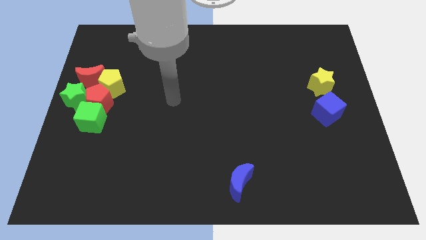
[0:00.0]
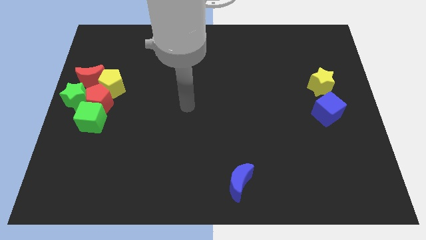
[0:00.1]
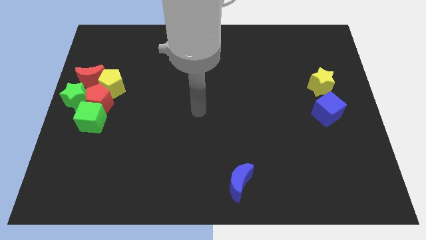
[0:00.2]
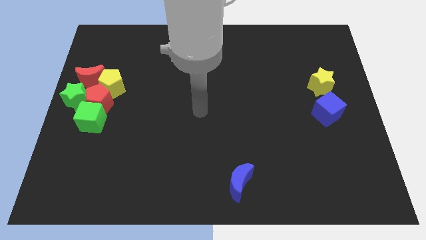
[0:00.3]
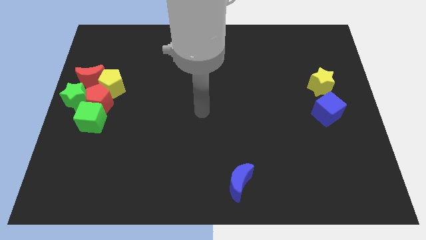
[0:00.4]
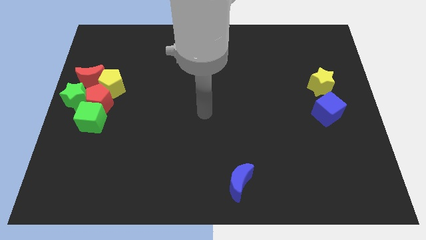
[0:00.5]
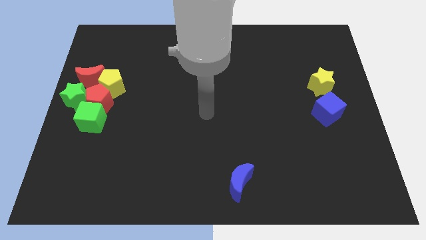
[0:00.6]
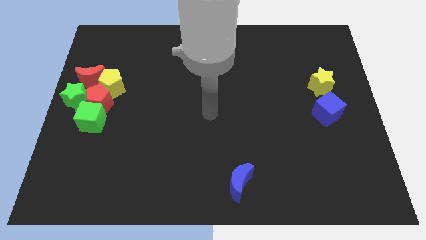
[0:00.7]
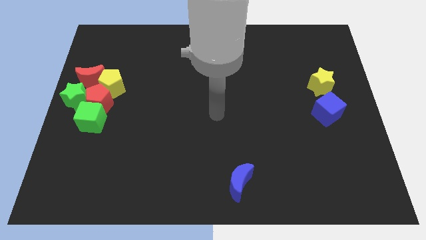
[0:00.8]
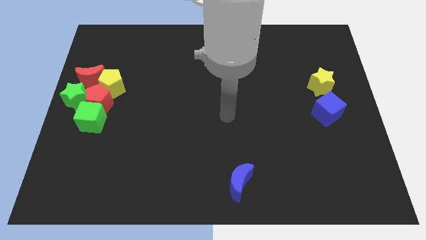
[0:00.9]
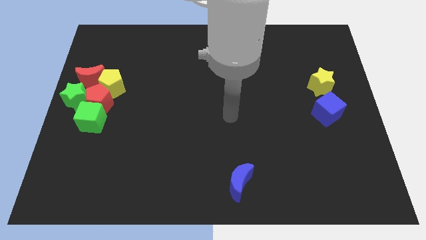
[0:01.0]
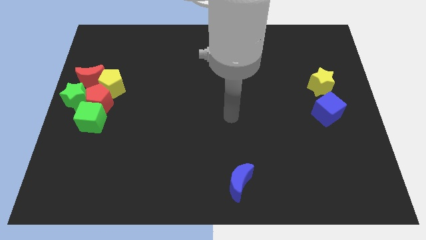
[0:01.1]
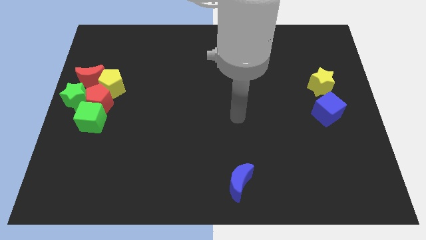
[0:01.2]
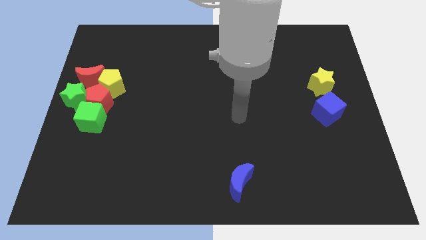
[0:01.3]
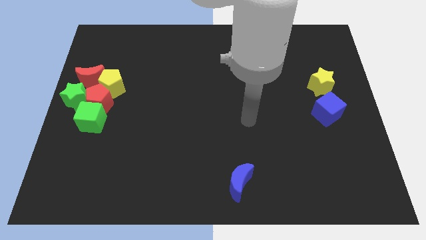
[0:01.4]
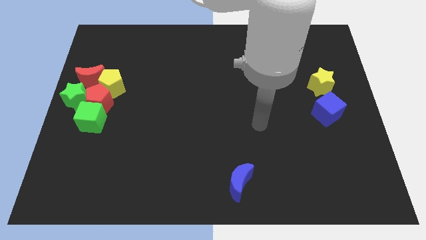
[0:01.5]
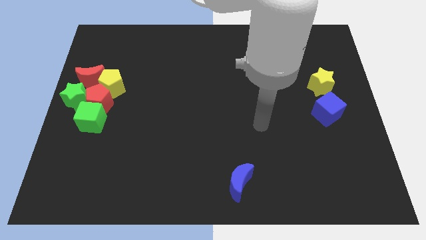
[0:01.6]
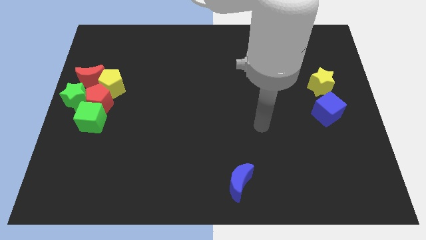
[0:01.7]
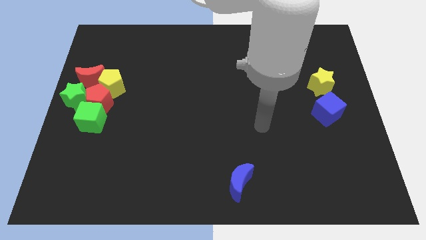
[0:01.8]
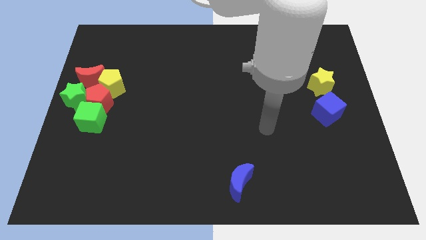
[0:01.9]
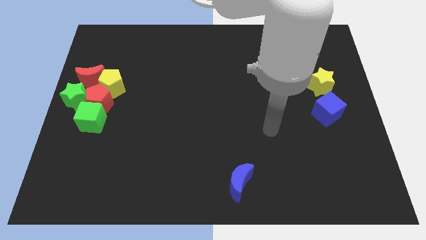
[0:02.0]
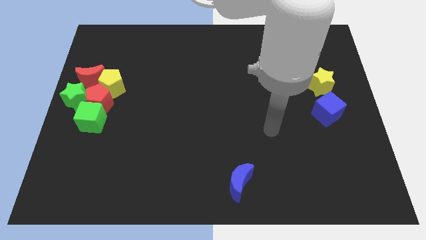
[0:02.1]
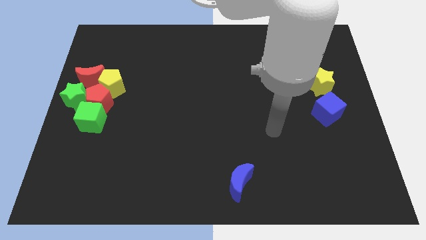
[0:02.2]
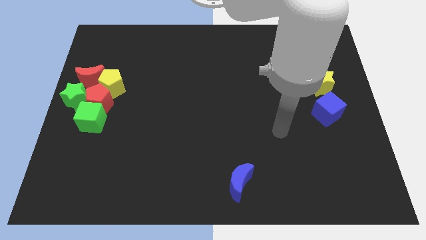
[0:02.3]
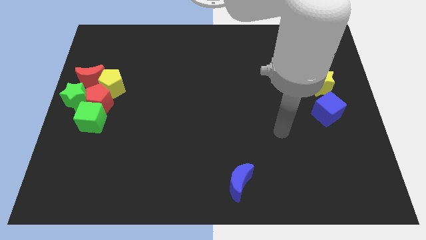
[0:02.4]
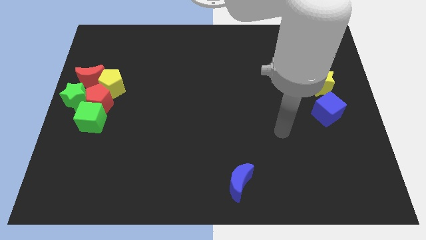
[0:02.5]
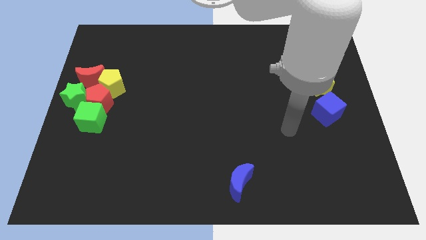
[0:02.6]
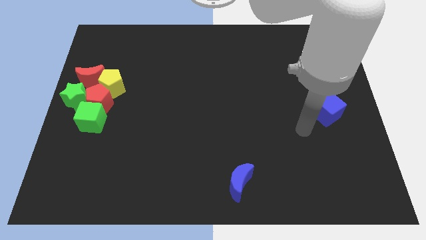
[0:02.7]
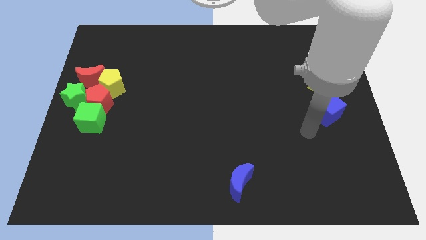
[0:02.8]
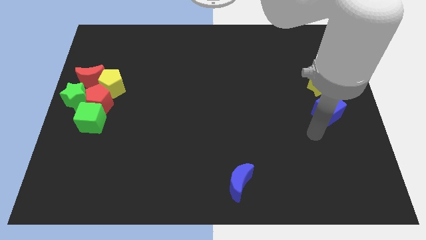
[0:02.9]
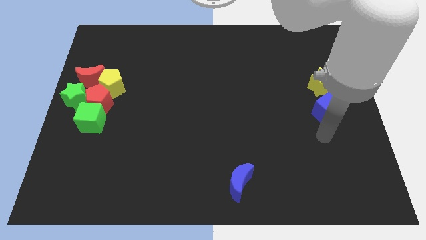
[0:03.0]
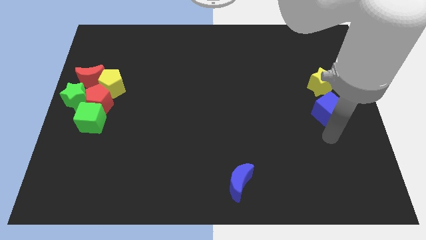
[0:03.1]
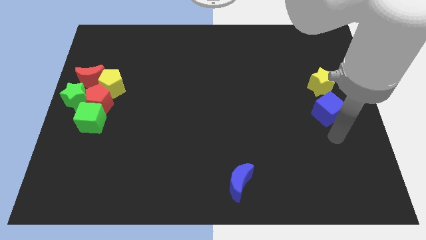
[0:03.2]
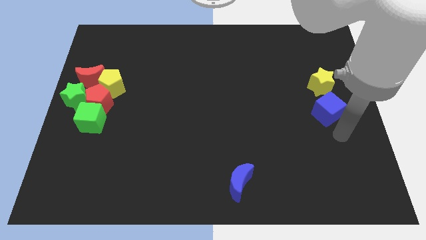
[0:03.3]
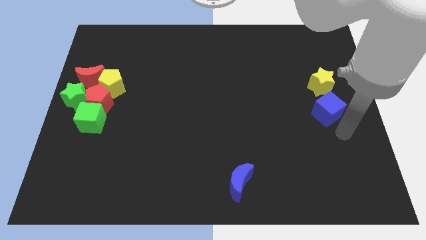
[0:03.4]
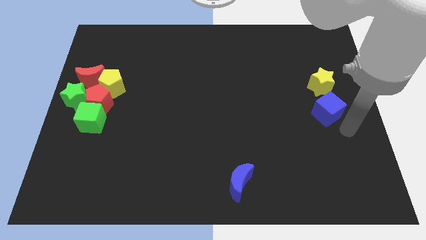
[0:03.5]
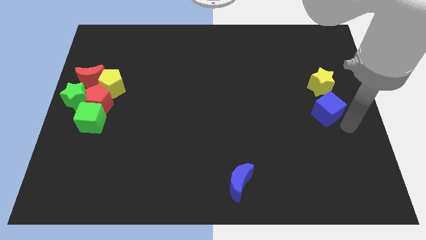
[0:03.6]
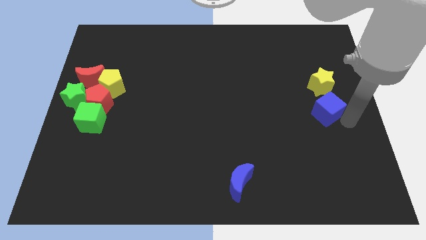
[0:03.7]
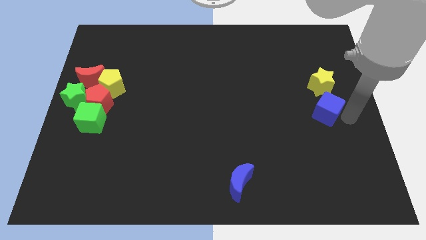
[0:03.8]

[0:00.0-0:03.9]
move the arm towards the blue cube

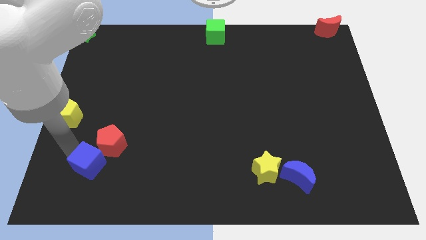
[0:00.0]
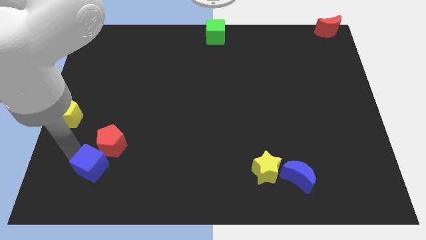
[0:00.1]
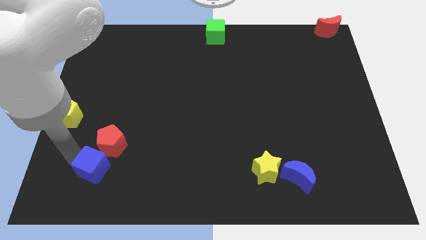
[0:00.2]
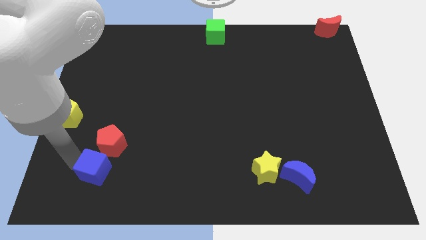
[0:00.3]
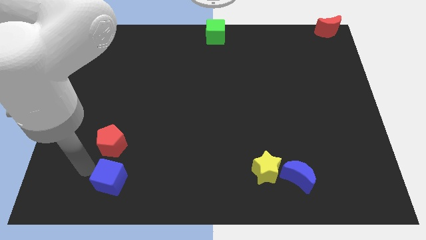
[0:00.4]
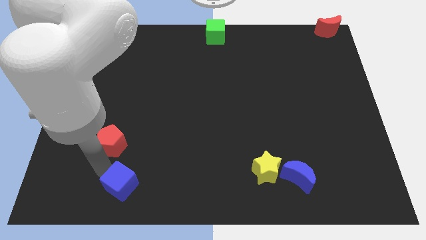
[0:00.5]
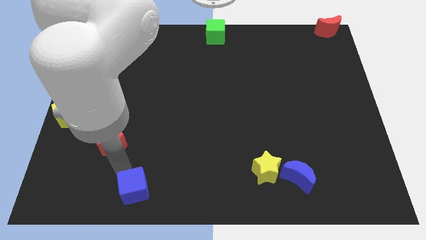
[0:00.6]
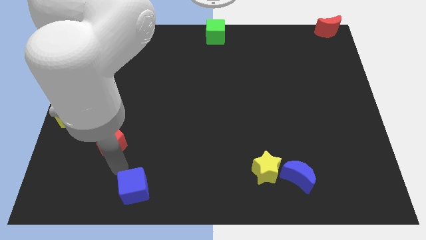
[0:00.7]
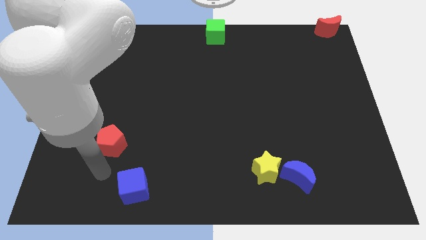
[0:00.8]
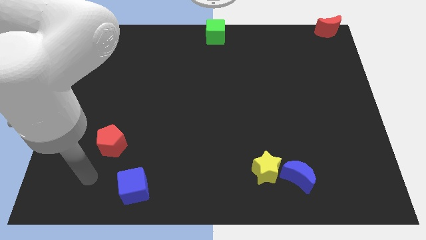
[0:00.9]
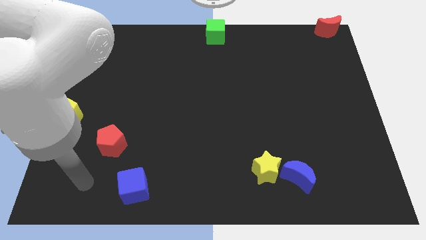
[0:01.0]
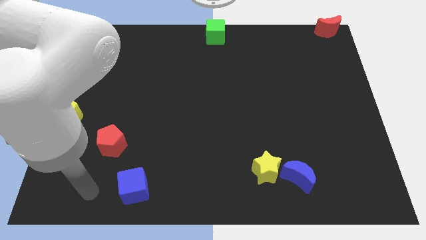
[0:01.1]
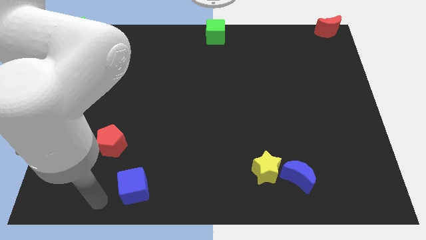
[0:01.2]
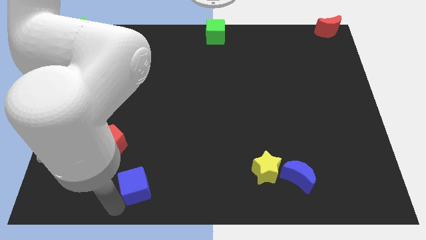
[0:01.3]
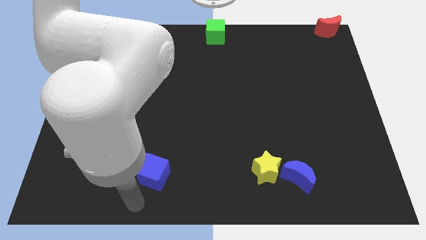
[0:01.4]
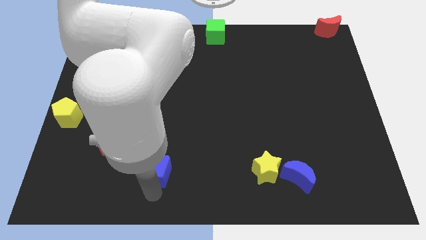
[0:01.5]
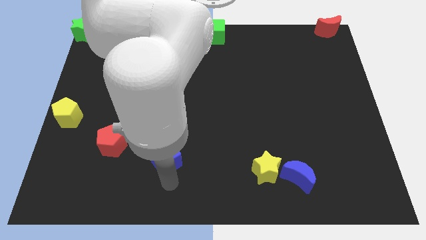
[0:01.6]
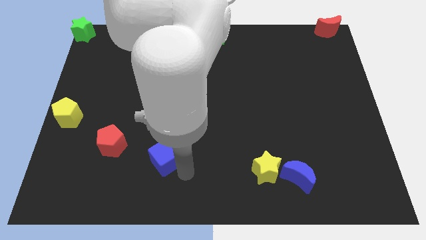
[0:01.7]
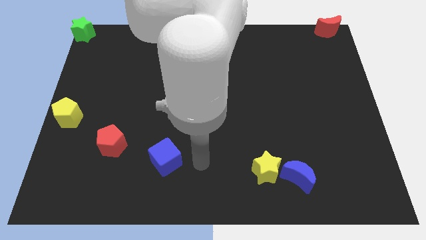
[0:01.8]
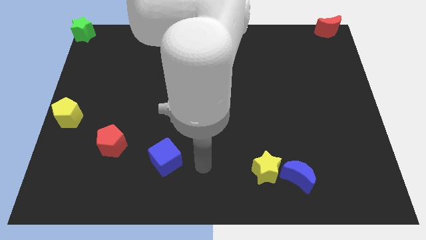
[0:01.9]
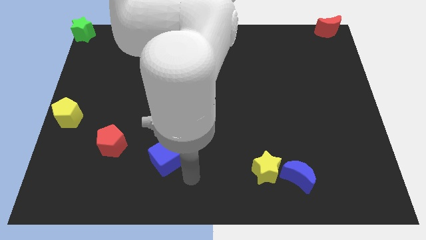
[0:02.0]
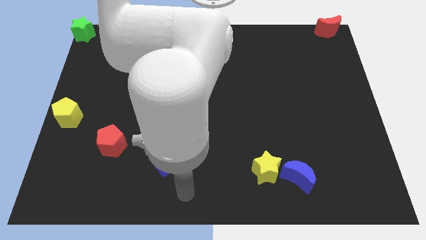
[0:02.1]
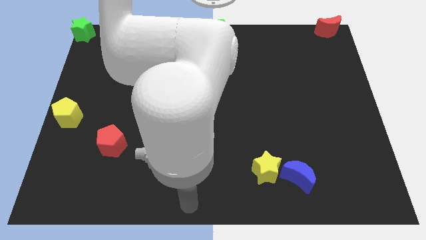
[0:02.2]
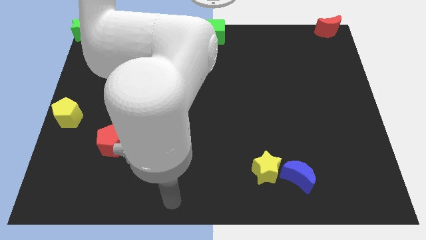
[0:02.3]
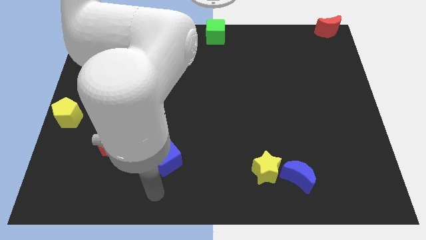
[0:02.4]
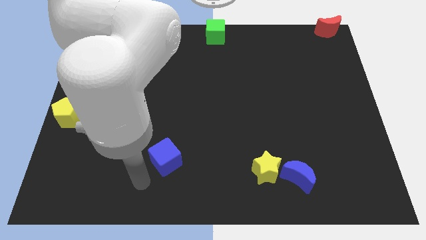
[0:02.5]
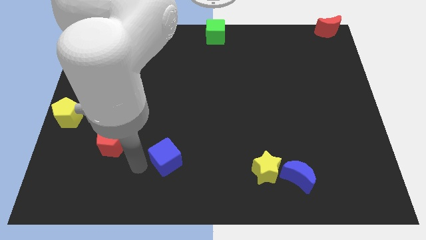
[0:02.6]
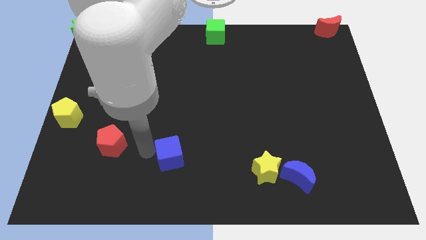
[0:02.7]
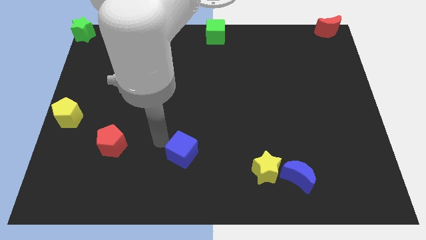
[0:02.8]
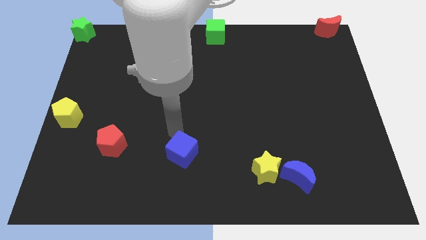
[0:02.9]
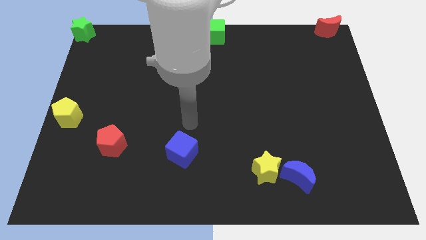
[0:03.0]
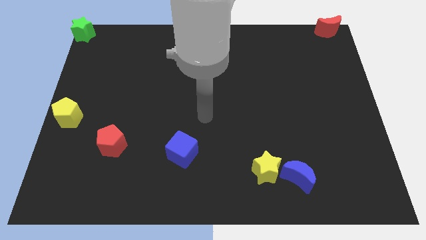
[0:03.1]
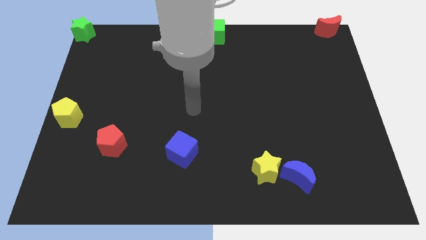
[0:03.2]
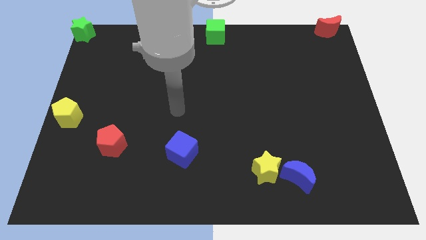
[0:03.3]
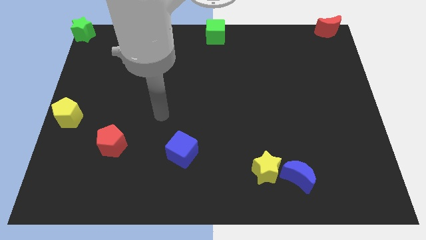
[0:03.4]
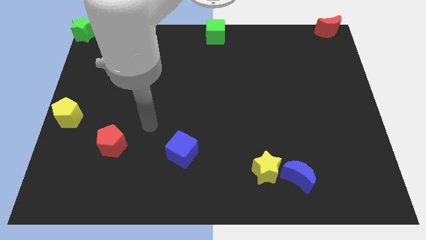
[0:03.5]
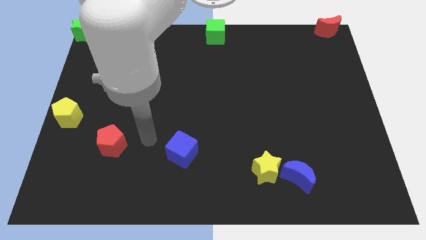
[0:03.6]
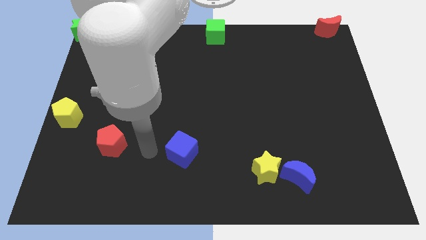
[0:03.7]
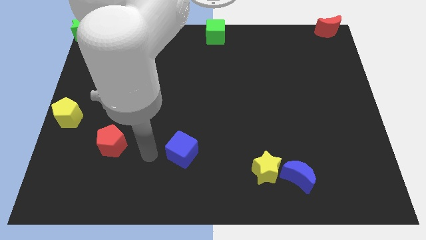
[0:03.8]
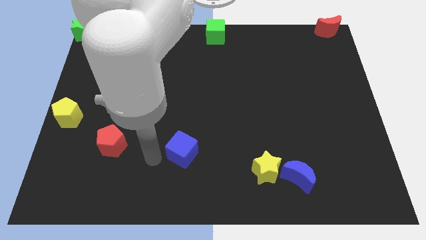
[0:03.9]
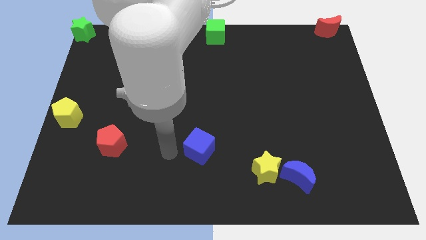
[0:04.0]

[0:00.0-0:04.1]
place blue cube to the right of red pentagon

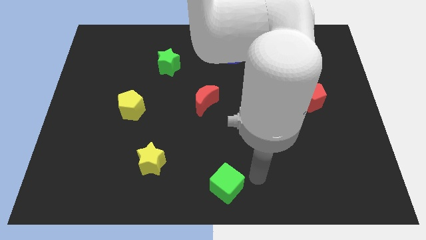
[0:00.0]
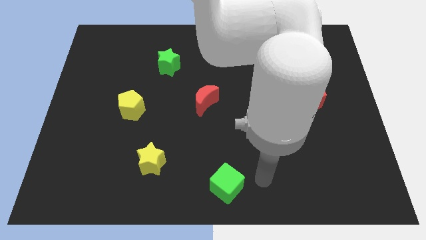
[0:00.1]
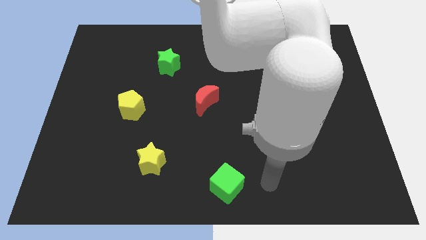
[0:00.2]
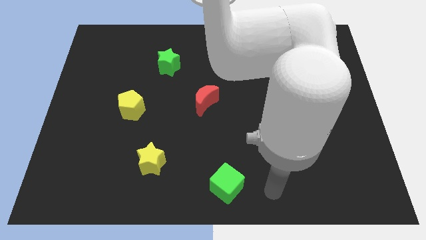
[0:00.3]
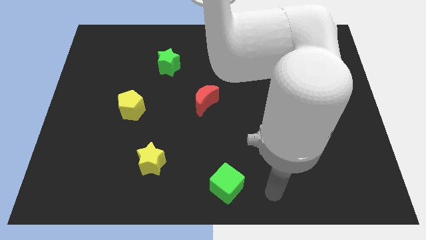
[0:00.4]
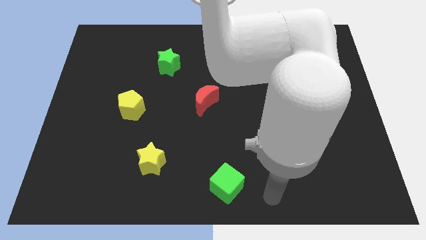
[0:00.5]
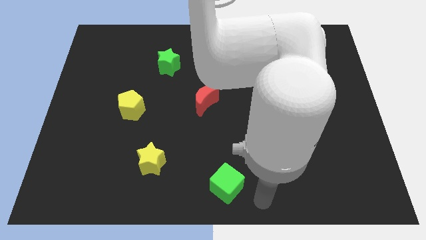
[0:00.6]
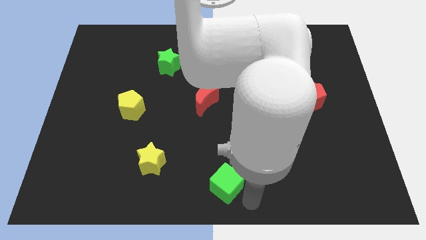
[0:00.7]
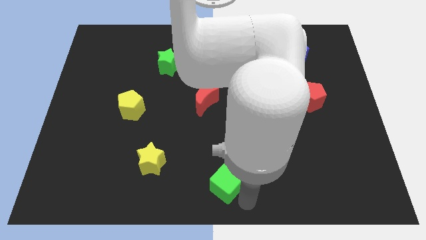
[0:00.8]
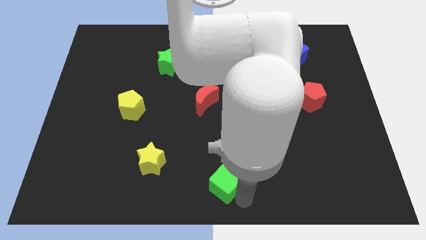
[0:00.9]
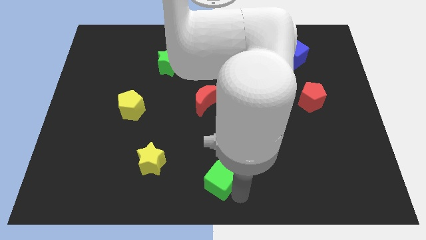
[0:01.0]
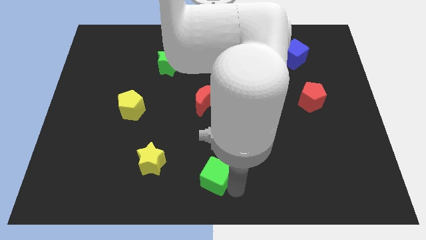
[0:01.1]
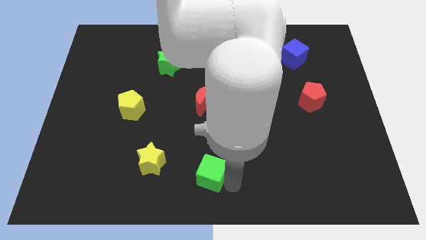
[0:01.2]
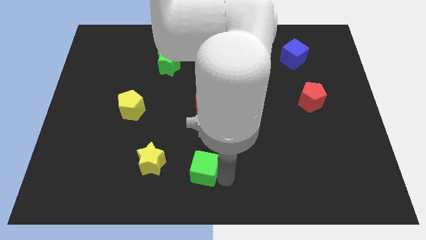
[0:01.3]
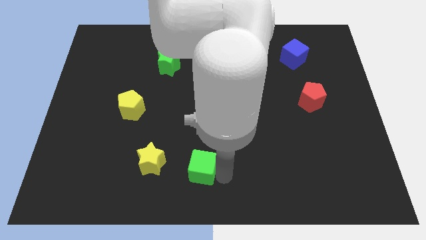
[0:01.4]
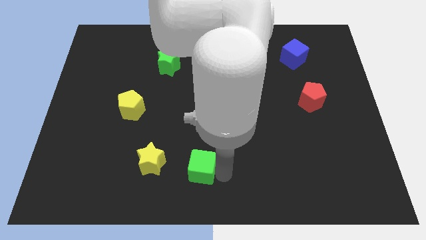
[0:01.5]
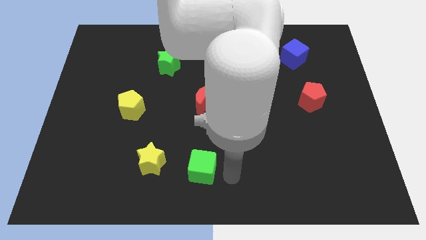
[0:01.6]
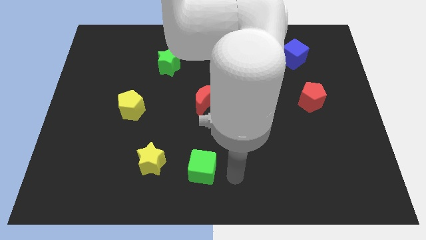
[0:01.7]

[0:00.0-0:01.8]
push green cube slightly towards yellow star
